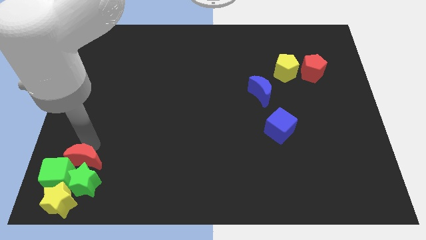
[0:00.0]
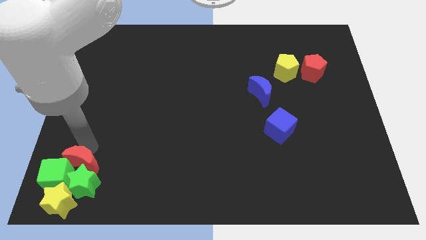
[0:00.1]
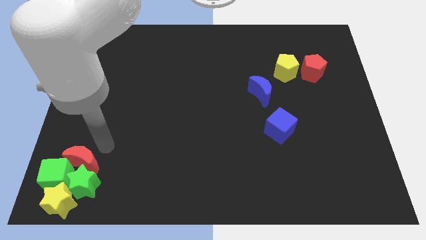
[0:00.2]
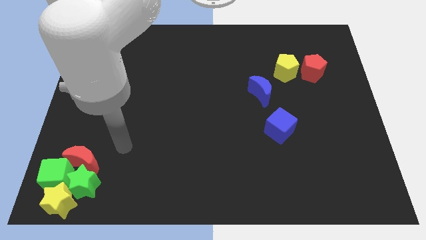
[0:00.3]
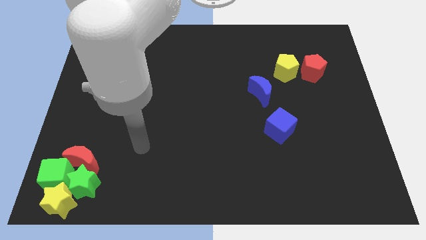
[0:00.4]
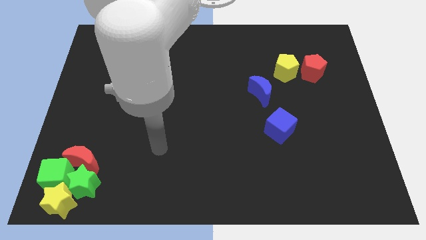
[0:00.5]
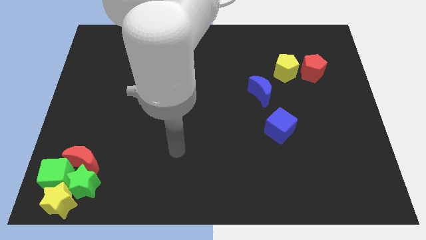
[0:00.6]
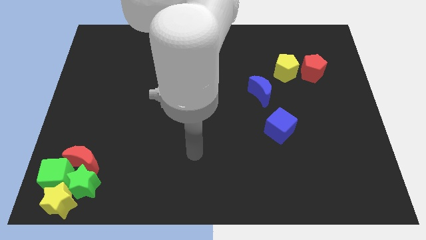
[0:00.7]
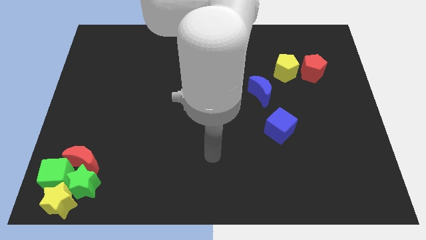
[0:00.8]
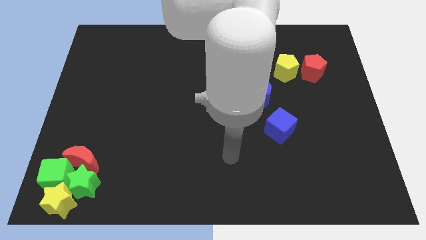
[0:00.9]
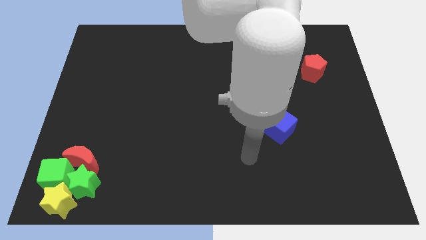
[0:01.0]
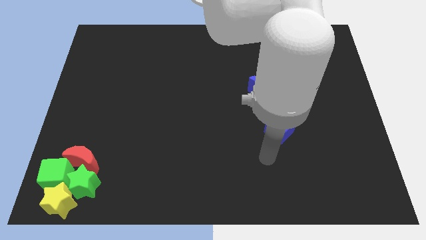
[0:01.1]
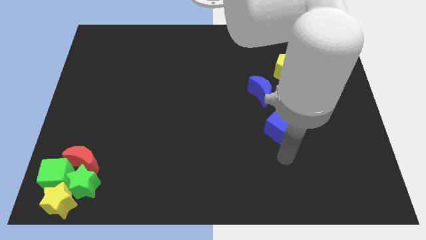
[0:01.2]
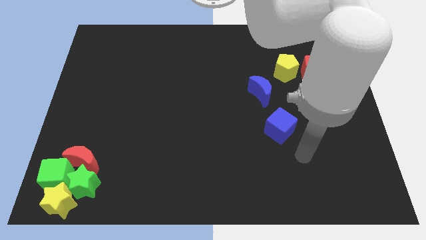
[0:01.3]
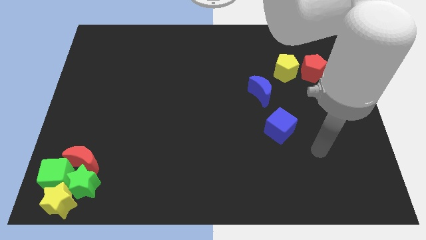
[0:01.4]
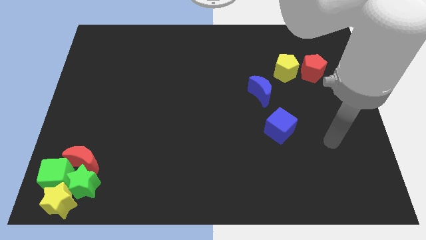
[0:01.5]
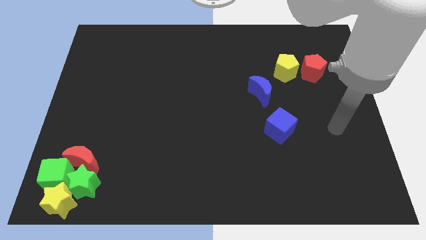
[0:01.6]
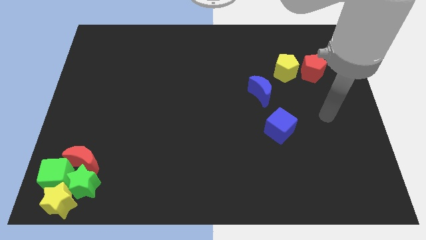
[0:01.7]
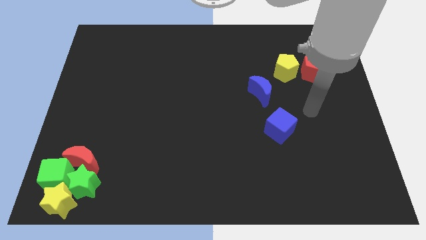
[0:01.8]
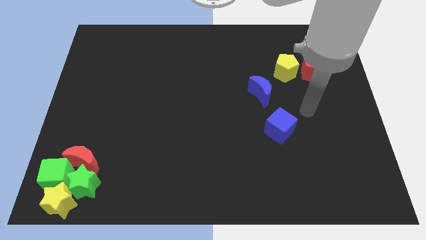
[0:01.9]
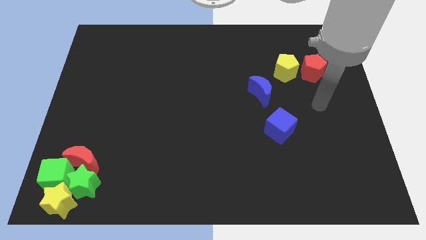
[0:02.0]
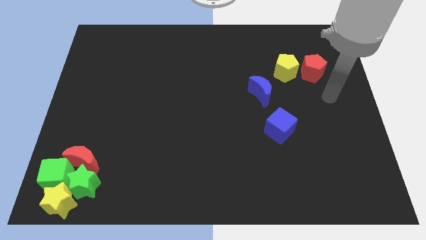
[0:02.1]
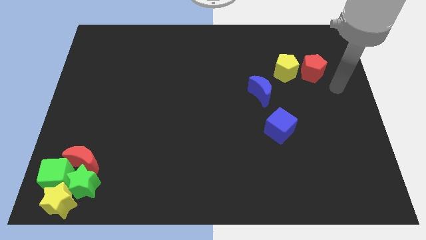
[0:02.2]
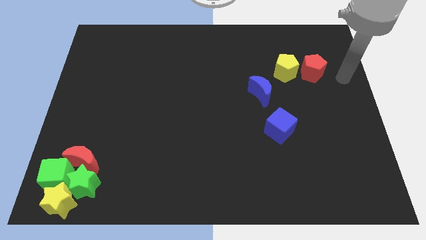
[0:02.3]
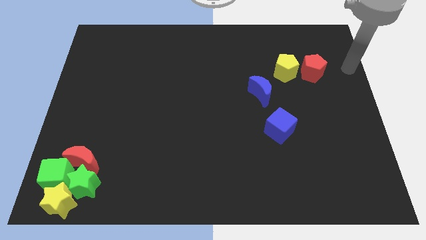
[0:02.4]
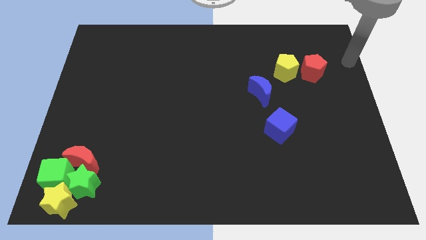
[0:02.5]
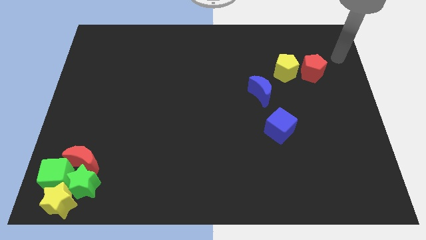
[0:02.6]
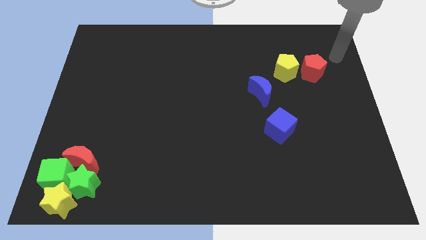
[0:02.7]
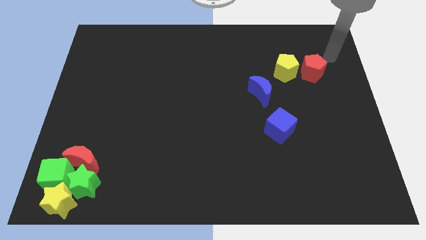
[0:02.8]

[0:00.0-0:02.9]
point the arm to the top right of the red pentagon

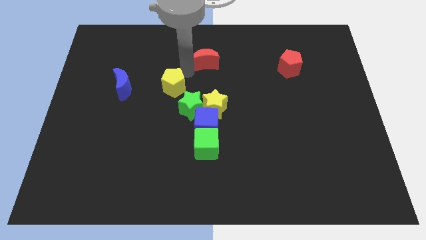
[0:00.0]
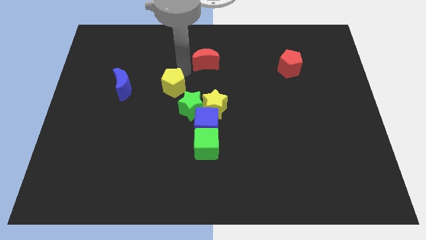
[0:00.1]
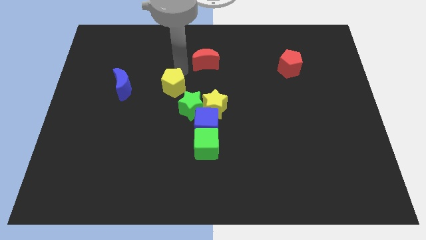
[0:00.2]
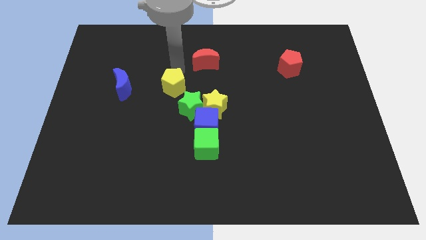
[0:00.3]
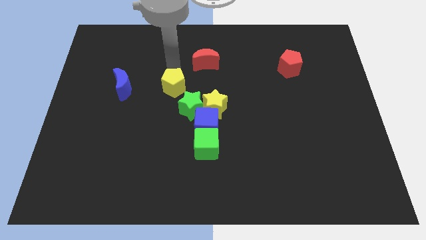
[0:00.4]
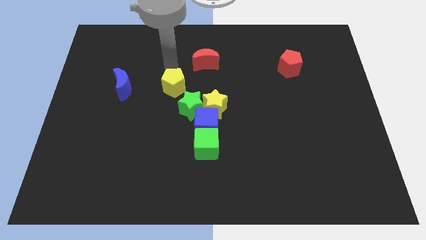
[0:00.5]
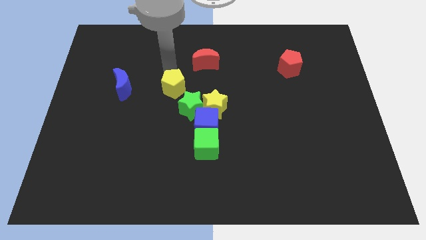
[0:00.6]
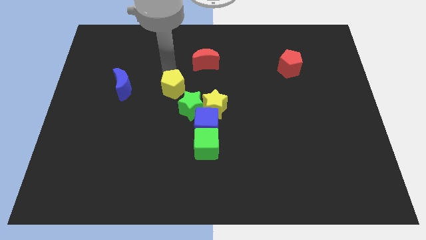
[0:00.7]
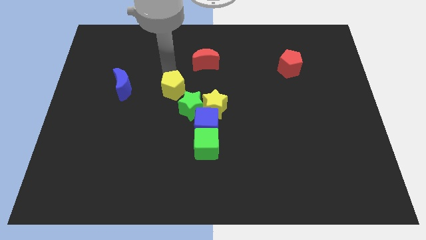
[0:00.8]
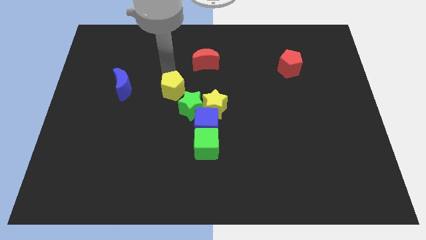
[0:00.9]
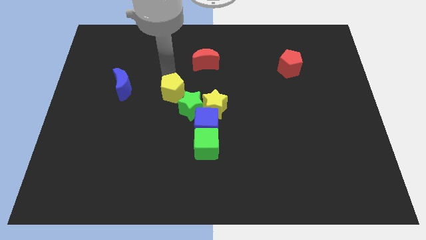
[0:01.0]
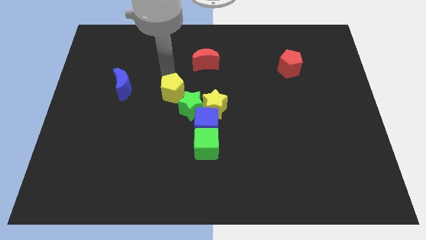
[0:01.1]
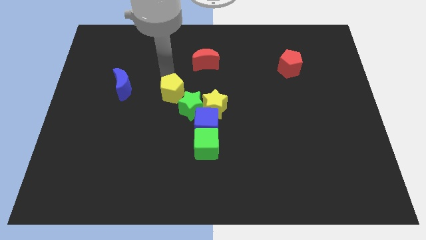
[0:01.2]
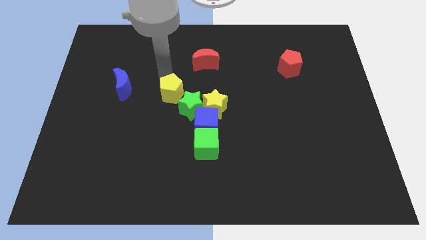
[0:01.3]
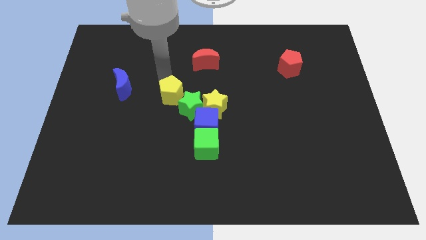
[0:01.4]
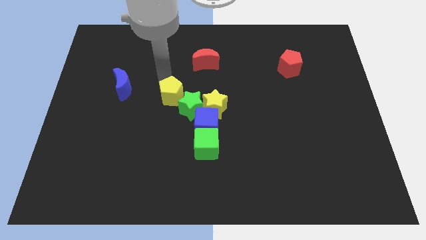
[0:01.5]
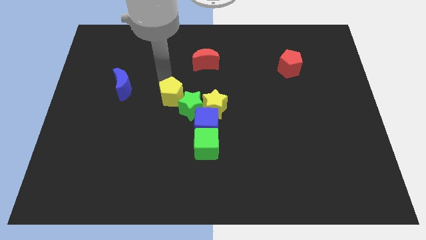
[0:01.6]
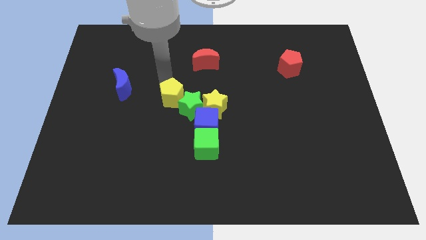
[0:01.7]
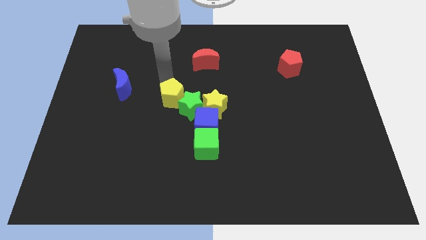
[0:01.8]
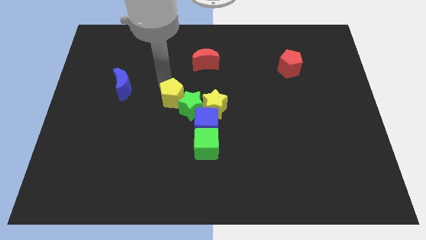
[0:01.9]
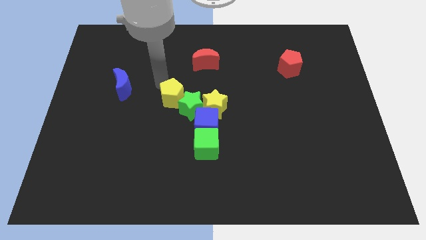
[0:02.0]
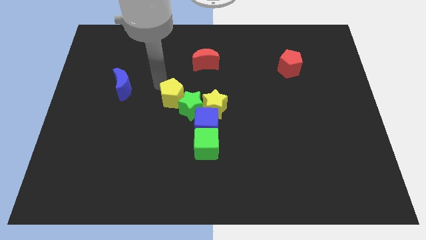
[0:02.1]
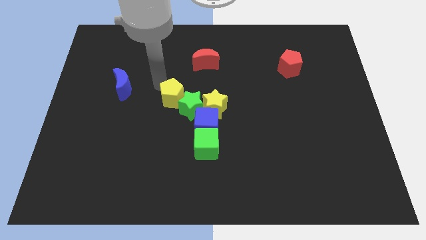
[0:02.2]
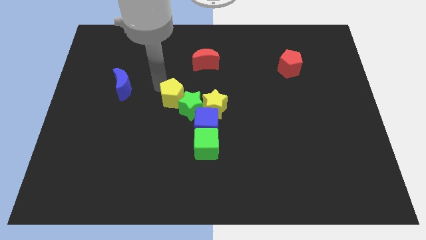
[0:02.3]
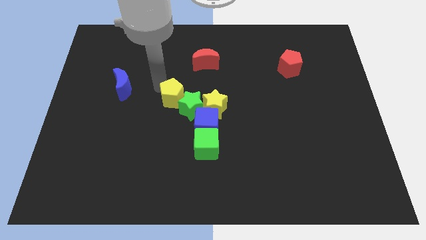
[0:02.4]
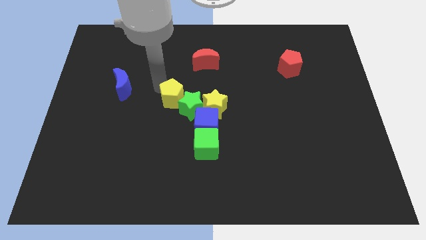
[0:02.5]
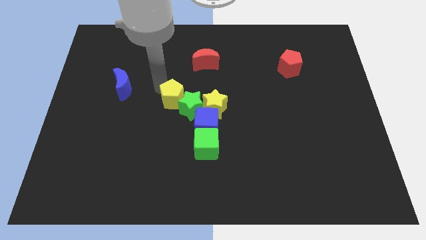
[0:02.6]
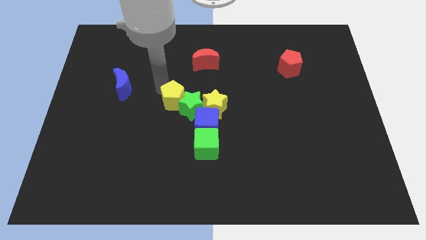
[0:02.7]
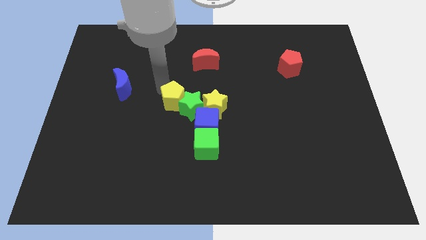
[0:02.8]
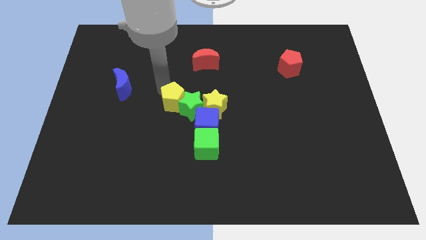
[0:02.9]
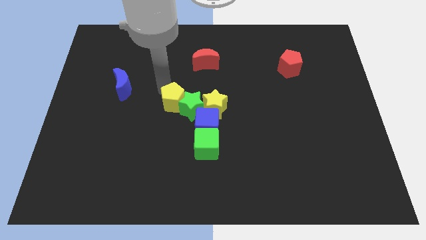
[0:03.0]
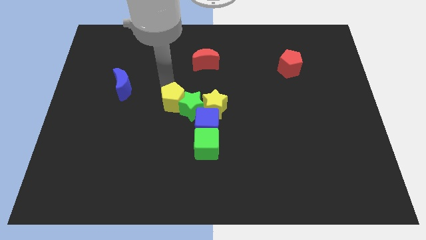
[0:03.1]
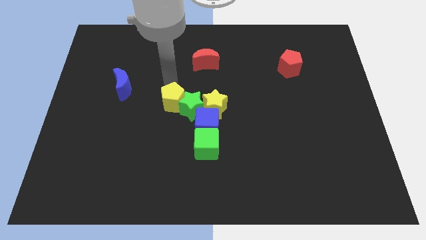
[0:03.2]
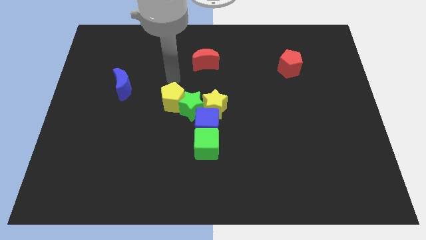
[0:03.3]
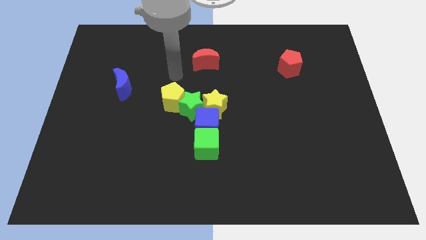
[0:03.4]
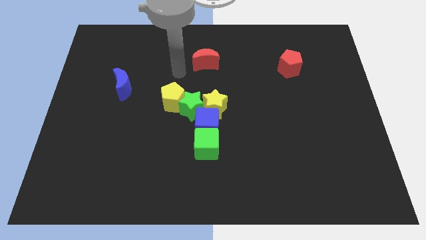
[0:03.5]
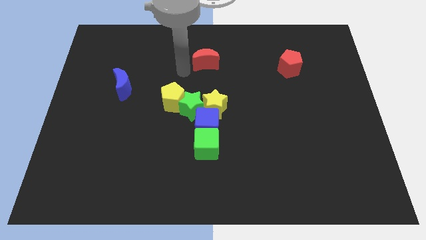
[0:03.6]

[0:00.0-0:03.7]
push the yellow pentagon into the green star

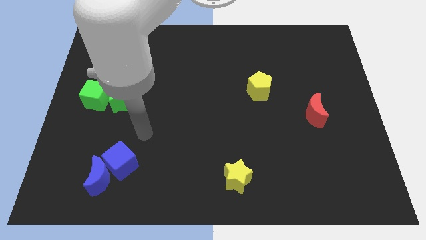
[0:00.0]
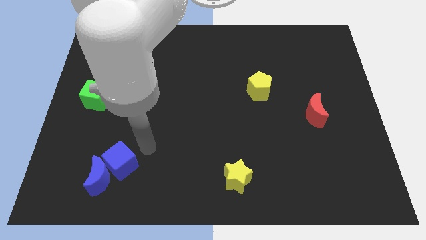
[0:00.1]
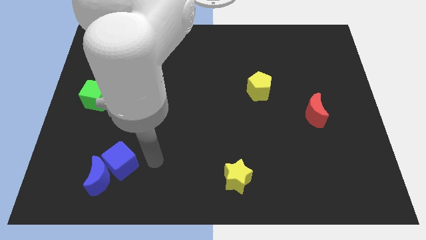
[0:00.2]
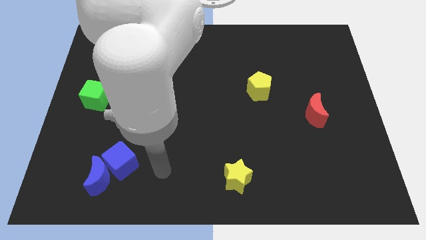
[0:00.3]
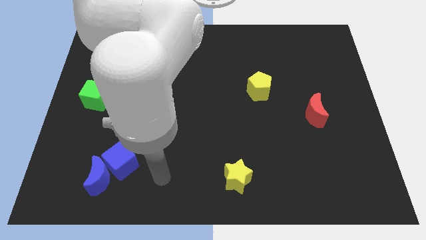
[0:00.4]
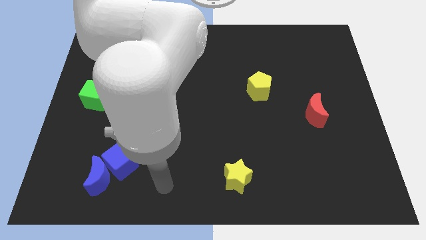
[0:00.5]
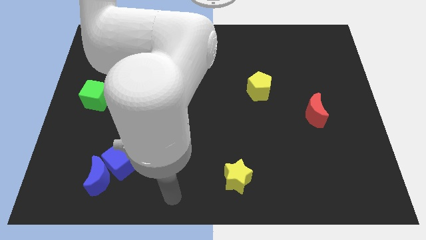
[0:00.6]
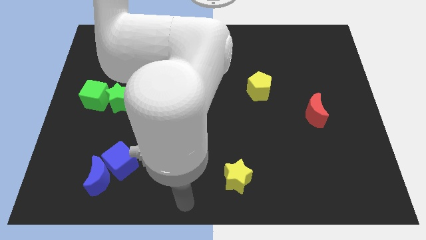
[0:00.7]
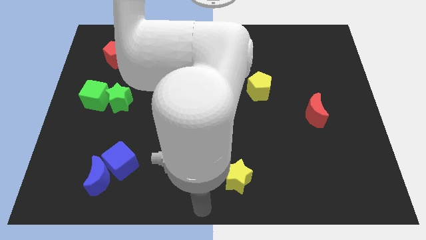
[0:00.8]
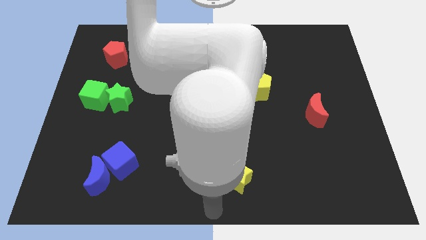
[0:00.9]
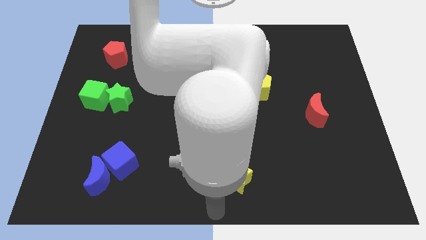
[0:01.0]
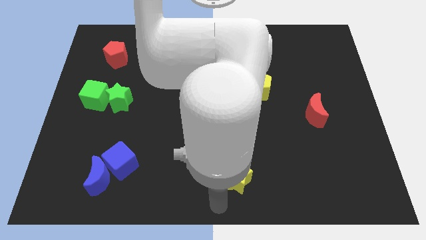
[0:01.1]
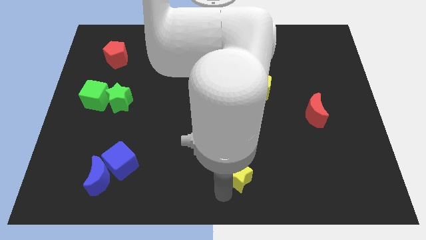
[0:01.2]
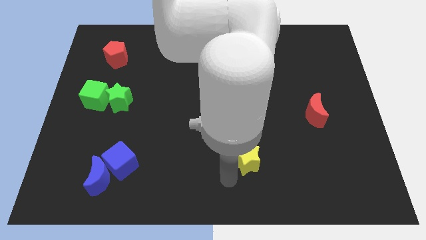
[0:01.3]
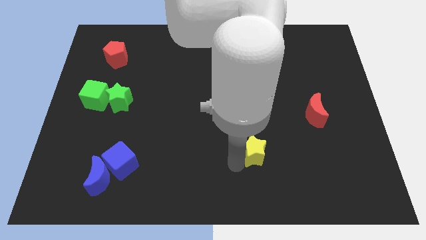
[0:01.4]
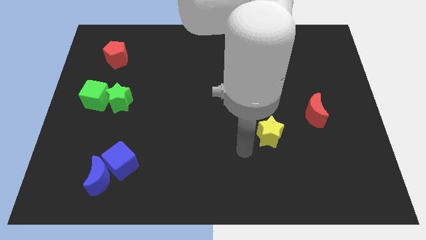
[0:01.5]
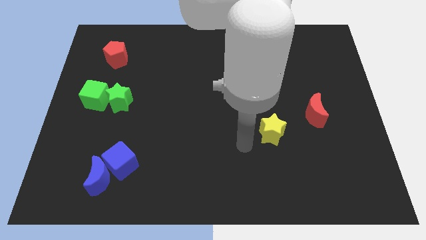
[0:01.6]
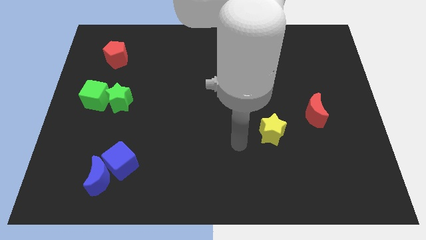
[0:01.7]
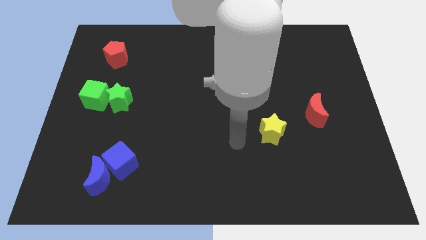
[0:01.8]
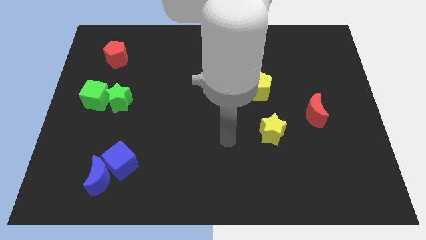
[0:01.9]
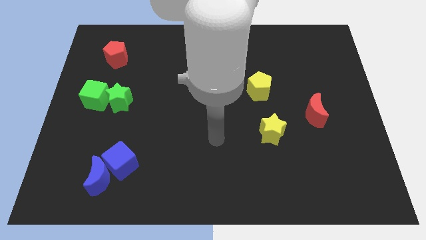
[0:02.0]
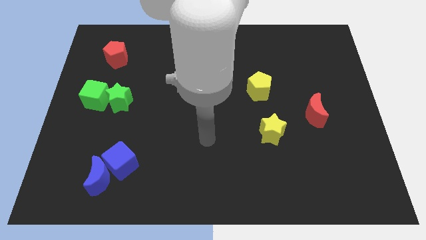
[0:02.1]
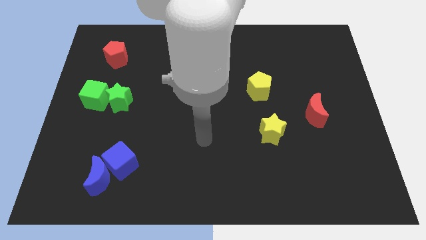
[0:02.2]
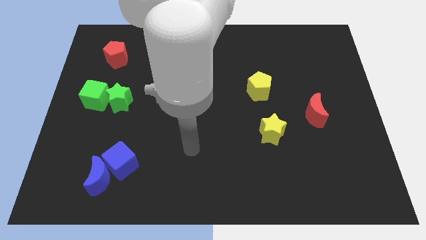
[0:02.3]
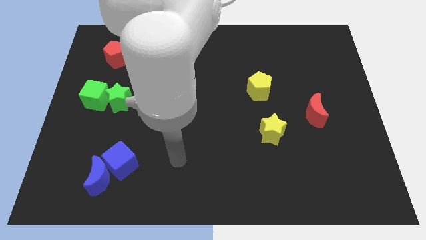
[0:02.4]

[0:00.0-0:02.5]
place the yellow star below right to the yellow pentagon
